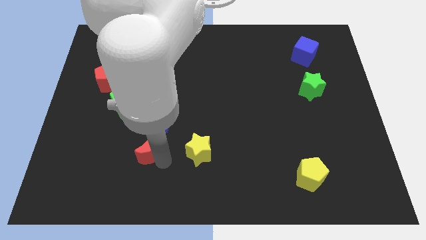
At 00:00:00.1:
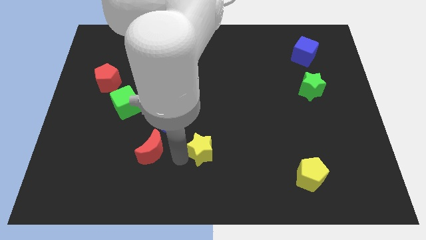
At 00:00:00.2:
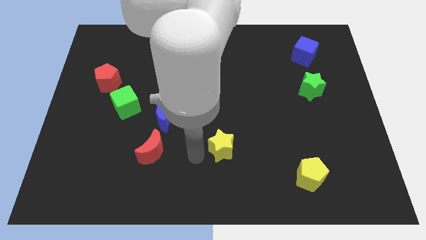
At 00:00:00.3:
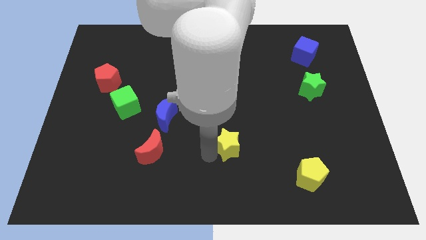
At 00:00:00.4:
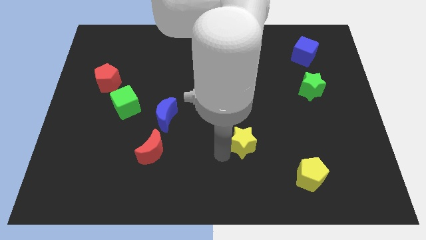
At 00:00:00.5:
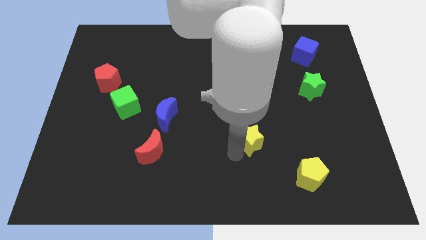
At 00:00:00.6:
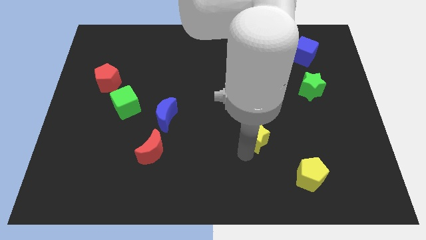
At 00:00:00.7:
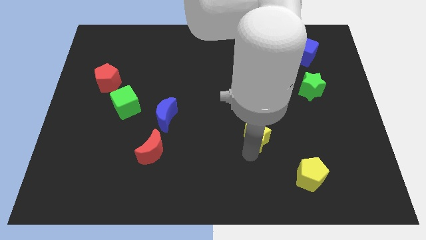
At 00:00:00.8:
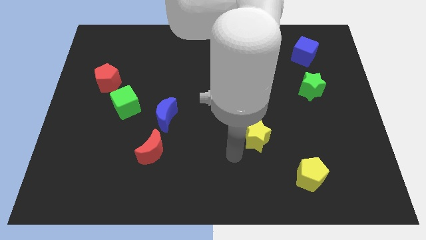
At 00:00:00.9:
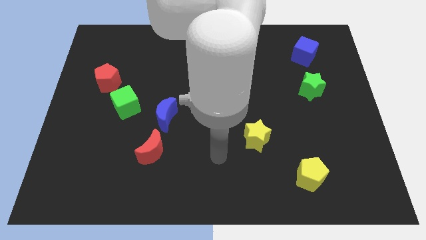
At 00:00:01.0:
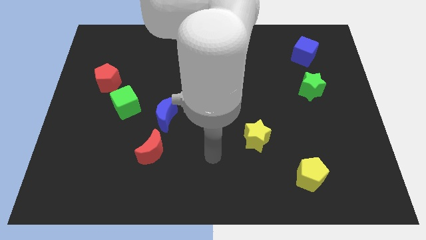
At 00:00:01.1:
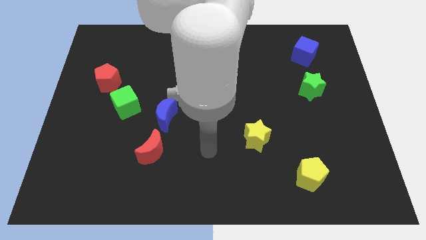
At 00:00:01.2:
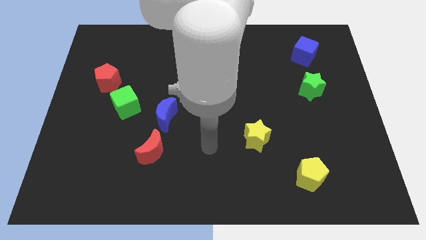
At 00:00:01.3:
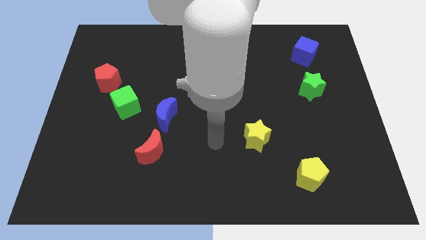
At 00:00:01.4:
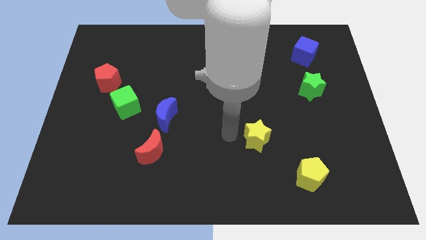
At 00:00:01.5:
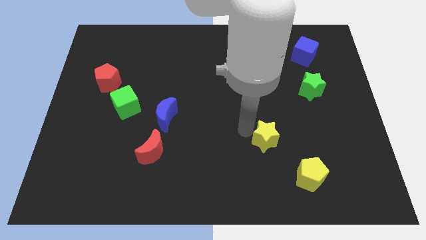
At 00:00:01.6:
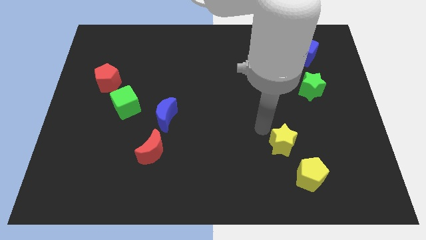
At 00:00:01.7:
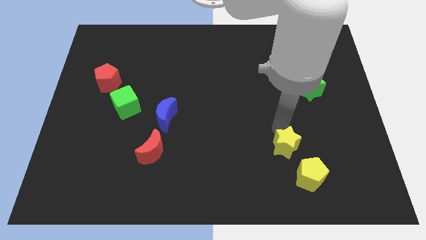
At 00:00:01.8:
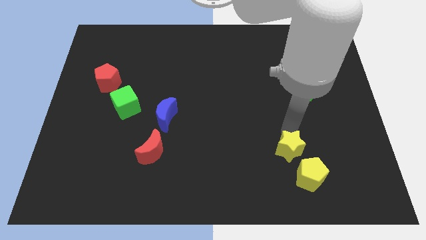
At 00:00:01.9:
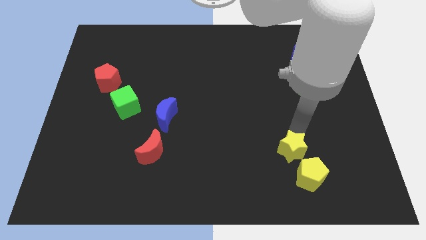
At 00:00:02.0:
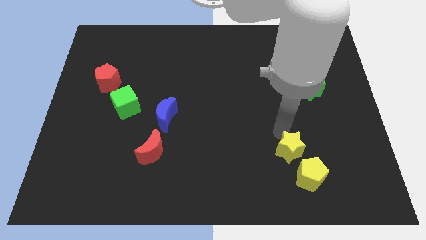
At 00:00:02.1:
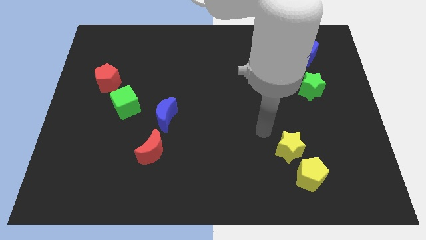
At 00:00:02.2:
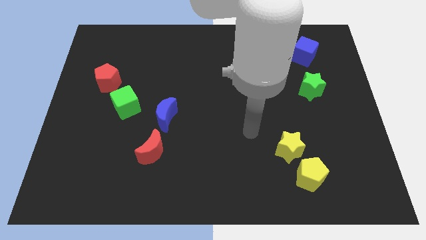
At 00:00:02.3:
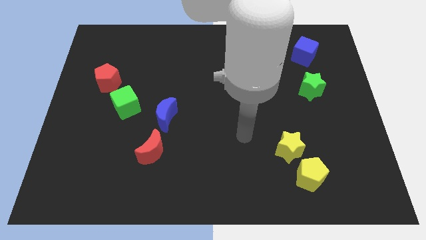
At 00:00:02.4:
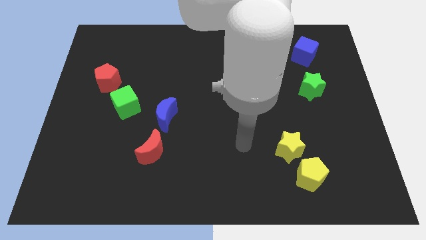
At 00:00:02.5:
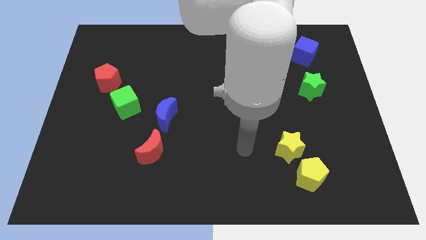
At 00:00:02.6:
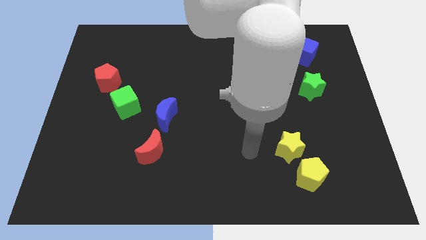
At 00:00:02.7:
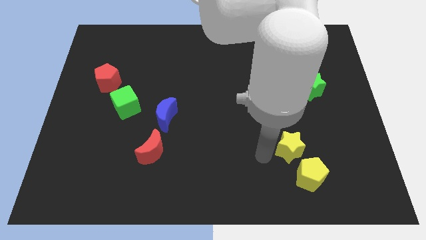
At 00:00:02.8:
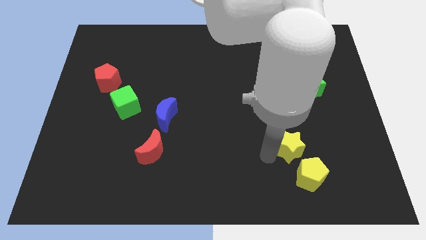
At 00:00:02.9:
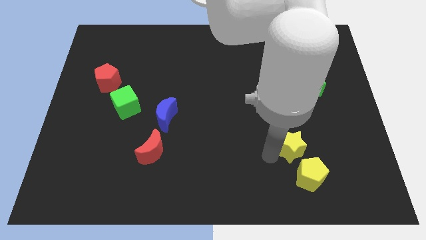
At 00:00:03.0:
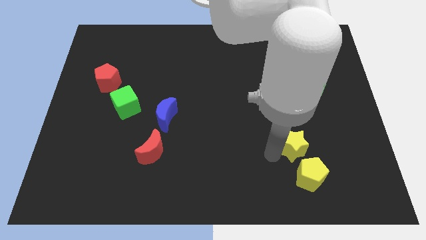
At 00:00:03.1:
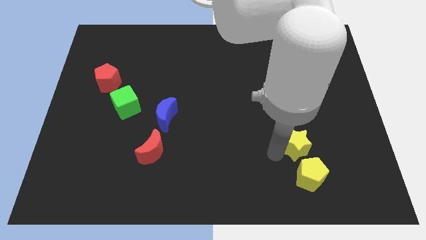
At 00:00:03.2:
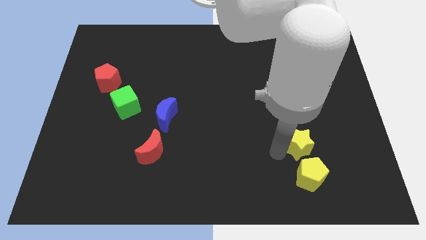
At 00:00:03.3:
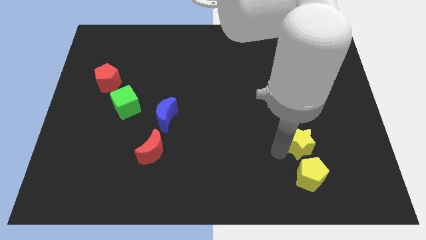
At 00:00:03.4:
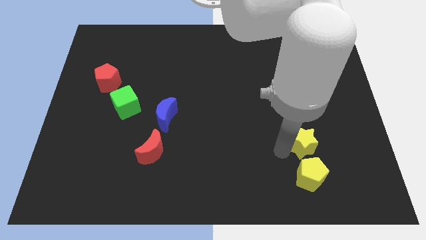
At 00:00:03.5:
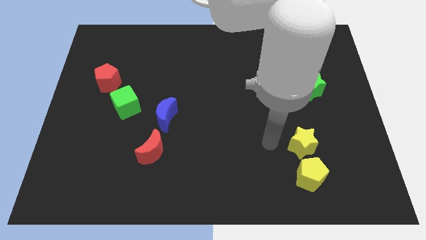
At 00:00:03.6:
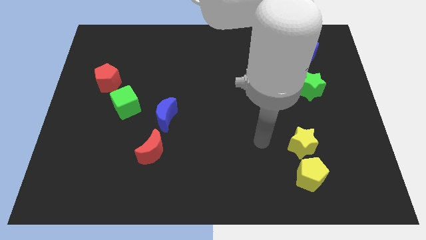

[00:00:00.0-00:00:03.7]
place the yellow star above the yellow pentagon

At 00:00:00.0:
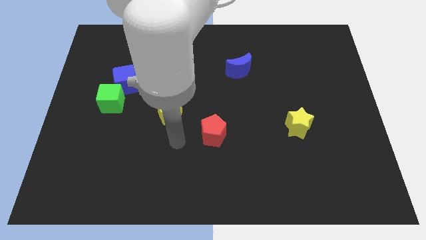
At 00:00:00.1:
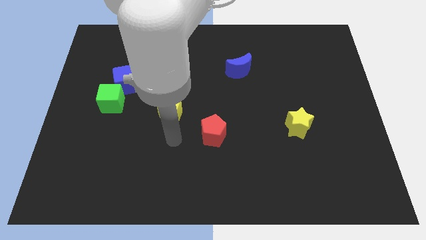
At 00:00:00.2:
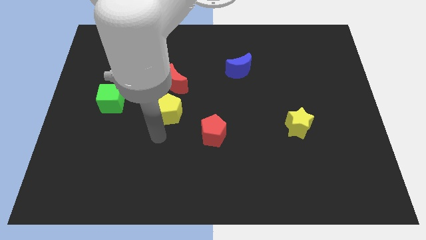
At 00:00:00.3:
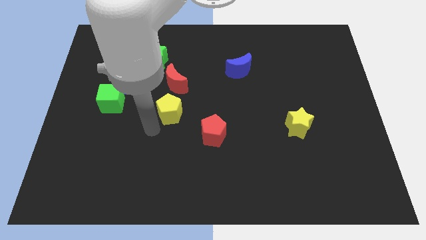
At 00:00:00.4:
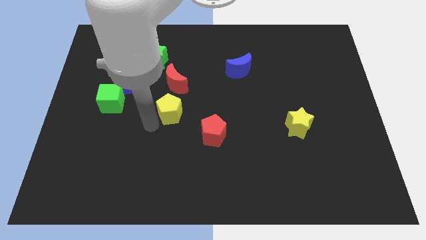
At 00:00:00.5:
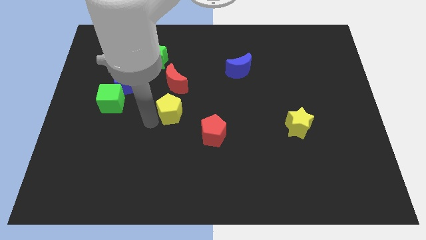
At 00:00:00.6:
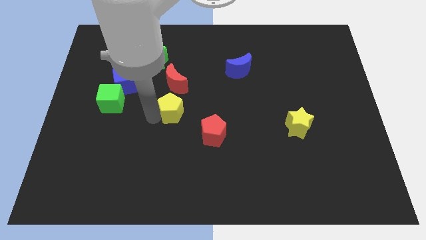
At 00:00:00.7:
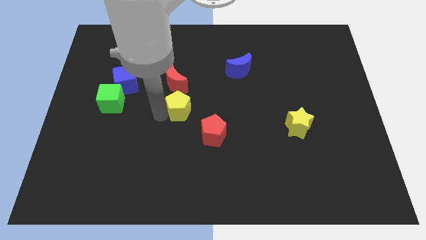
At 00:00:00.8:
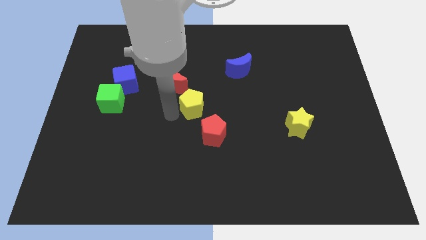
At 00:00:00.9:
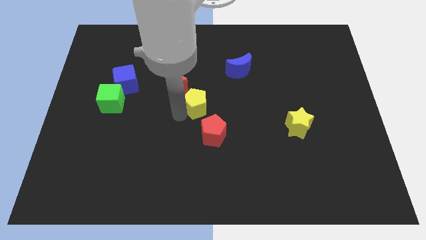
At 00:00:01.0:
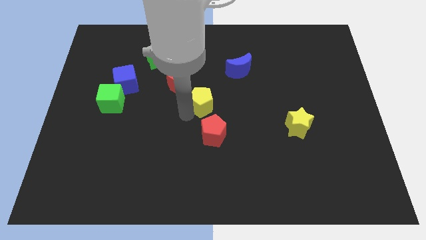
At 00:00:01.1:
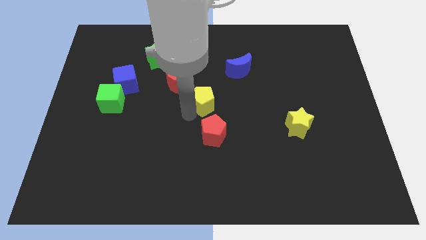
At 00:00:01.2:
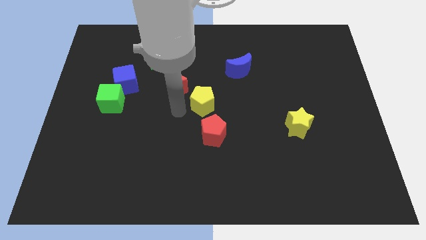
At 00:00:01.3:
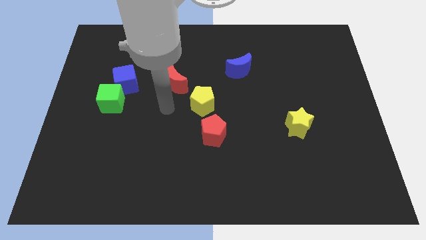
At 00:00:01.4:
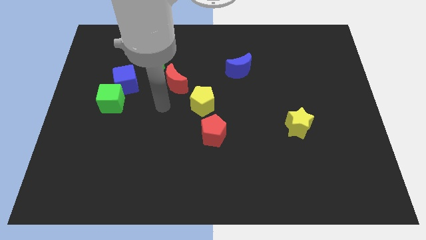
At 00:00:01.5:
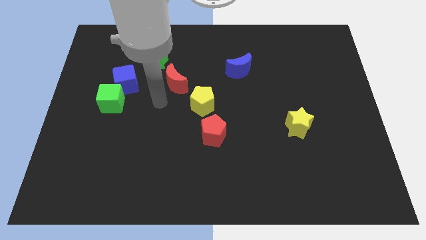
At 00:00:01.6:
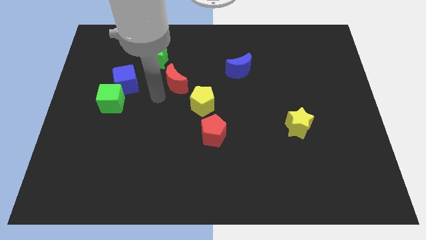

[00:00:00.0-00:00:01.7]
move the yellow pentagon slightly to the right

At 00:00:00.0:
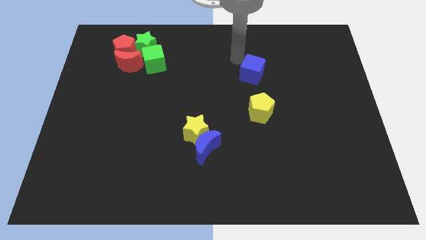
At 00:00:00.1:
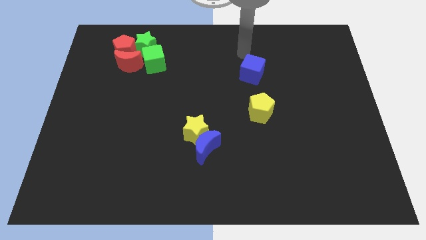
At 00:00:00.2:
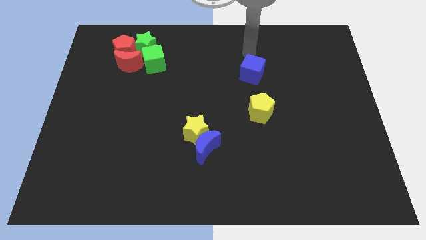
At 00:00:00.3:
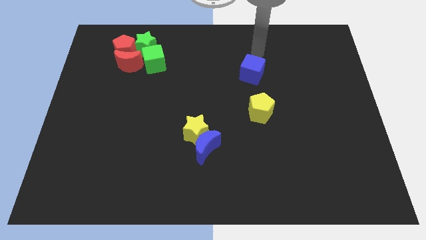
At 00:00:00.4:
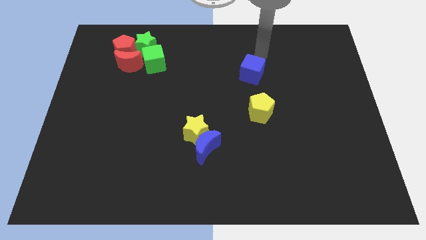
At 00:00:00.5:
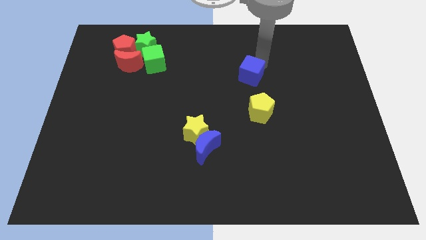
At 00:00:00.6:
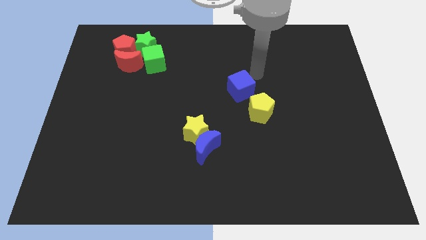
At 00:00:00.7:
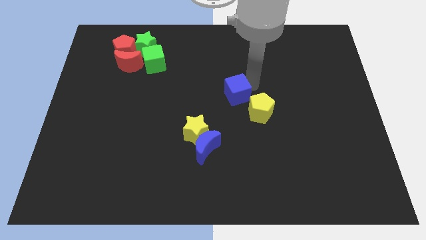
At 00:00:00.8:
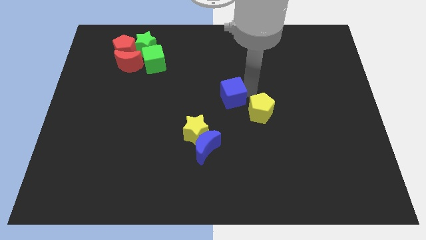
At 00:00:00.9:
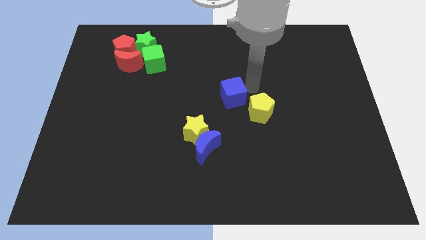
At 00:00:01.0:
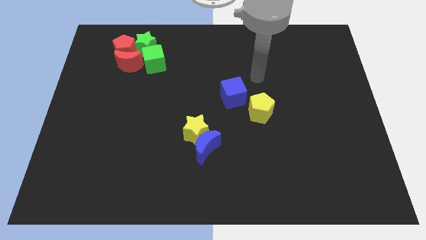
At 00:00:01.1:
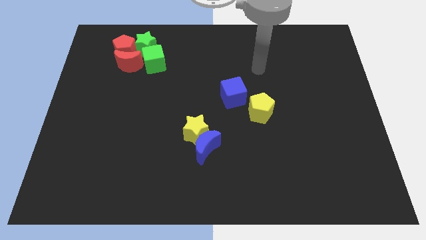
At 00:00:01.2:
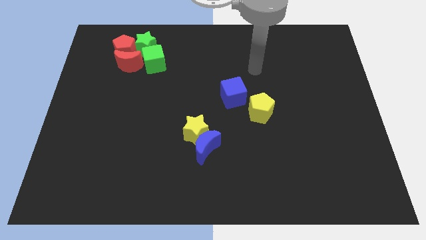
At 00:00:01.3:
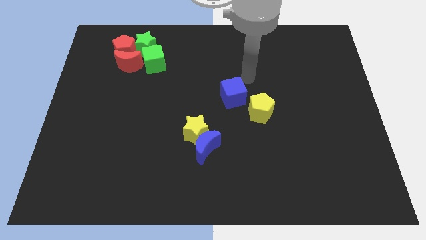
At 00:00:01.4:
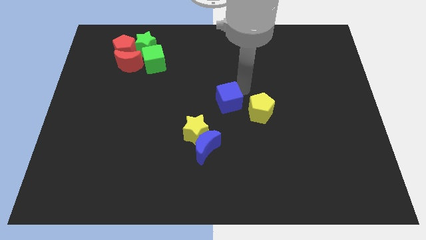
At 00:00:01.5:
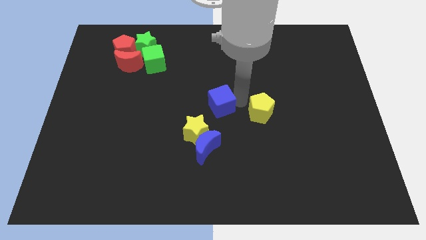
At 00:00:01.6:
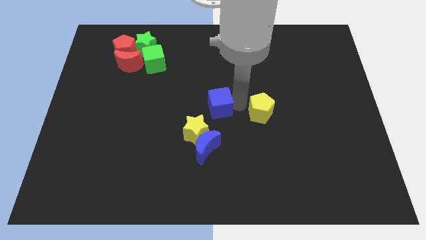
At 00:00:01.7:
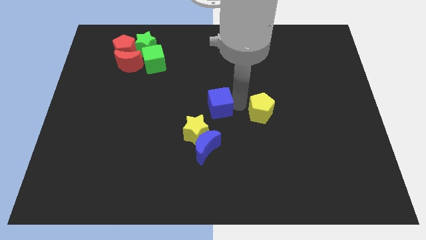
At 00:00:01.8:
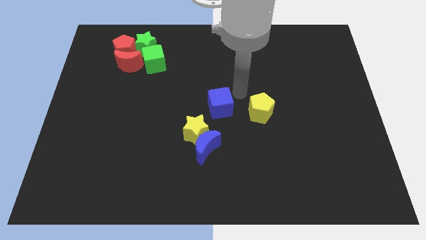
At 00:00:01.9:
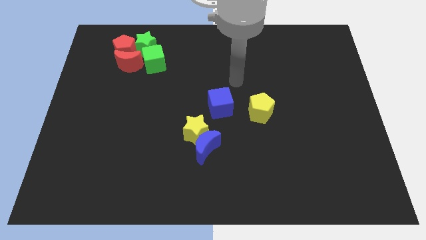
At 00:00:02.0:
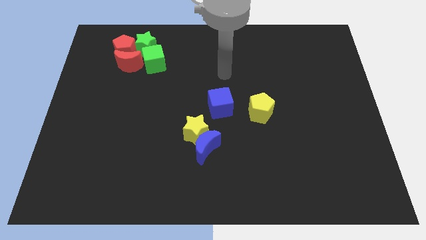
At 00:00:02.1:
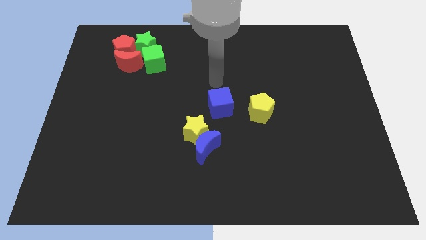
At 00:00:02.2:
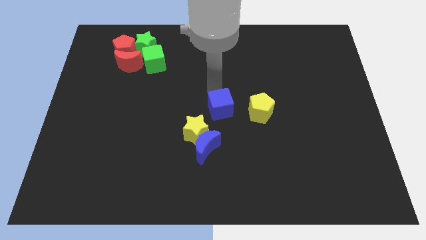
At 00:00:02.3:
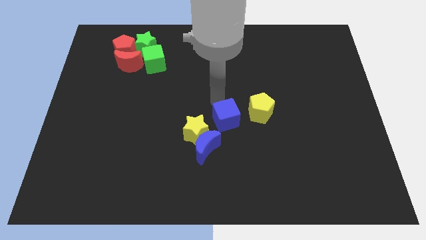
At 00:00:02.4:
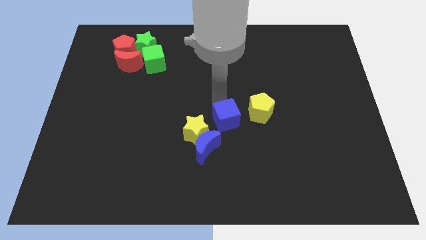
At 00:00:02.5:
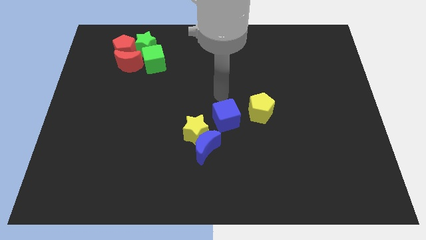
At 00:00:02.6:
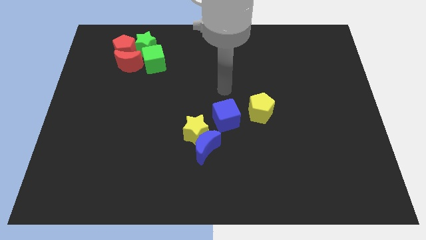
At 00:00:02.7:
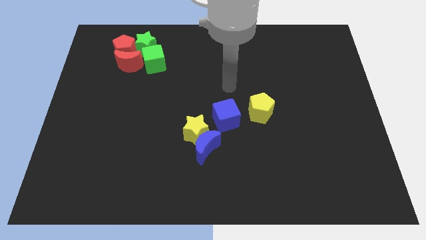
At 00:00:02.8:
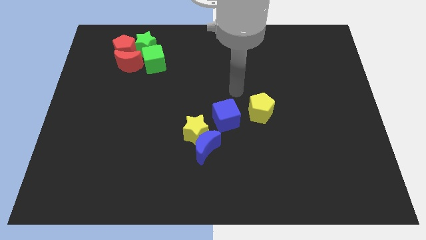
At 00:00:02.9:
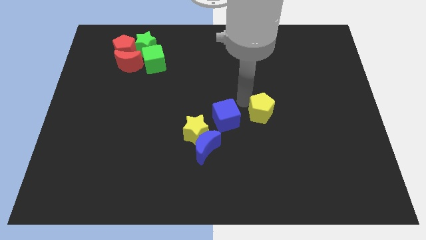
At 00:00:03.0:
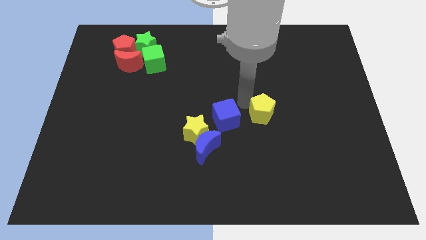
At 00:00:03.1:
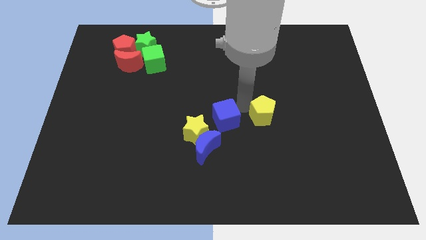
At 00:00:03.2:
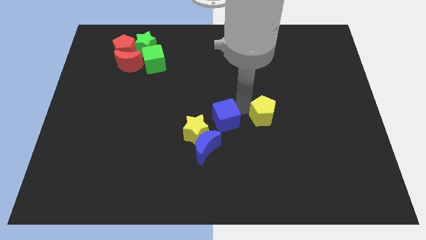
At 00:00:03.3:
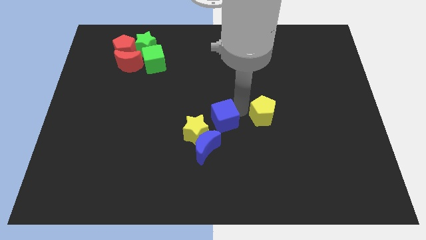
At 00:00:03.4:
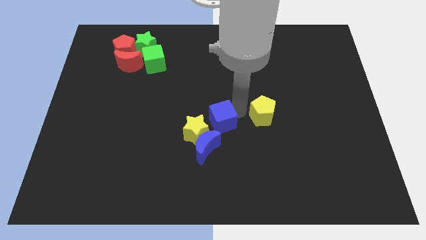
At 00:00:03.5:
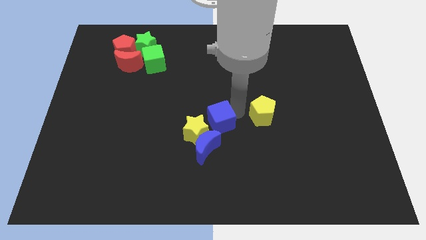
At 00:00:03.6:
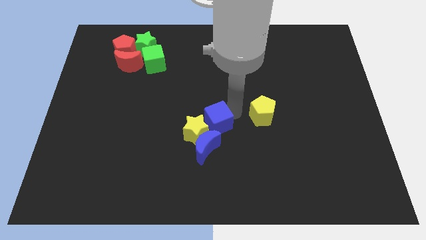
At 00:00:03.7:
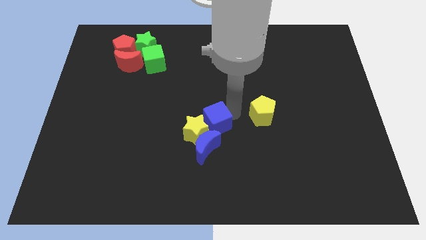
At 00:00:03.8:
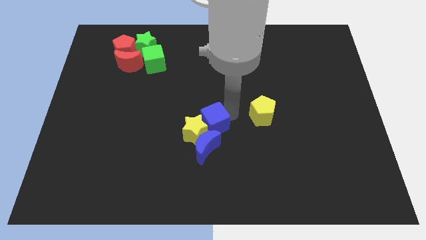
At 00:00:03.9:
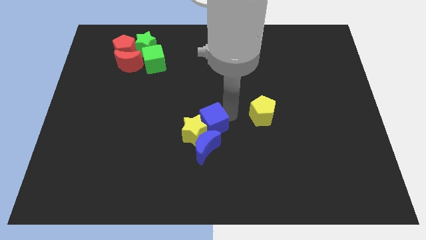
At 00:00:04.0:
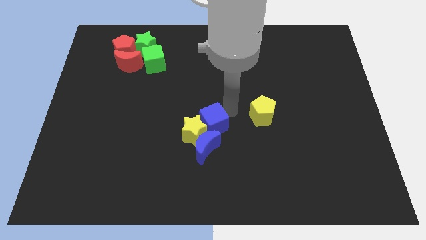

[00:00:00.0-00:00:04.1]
push blue cube into yellow star and blue crescent
